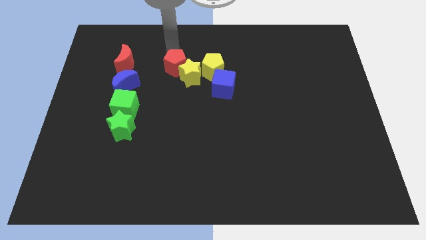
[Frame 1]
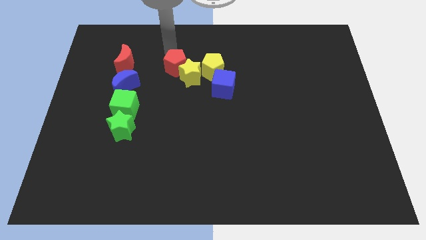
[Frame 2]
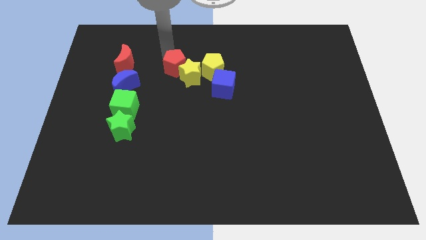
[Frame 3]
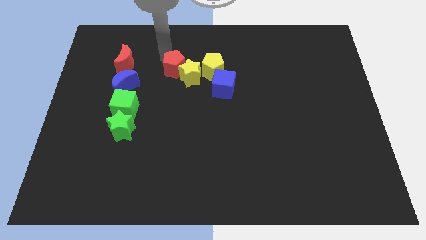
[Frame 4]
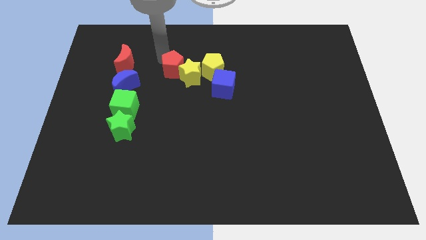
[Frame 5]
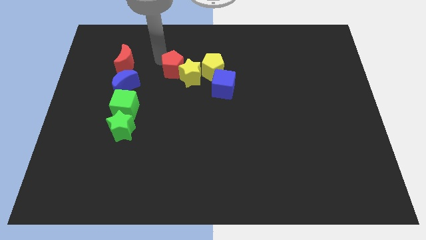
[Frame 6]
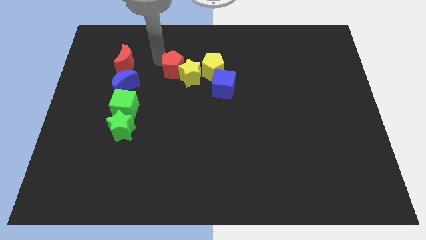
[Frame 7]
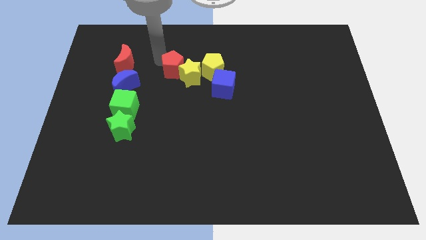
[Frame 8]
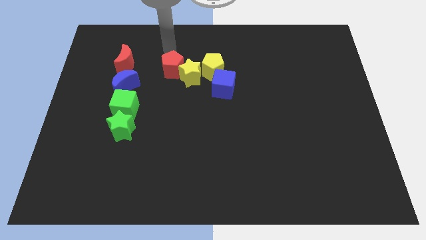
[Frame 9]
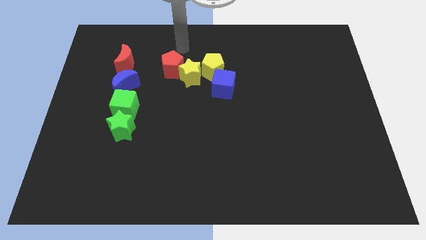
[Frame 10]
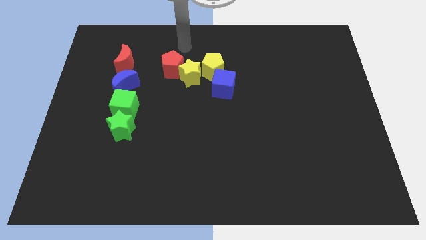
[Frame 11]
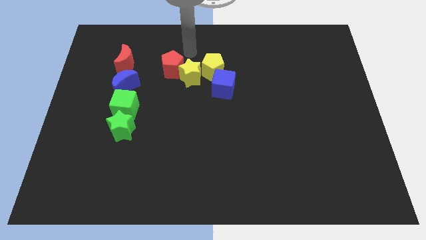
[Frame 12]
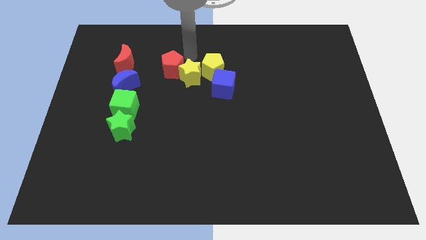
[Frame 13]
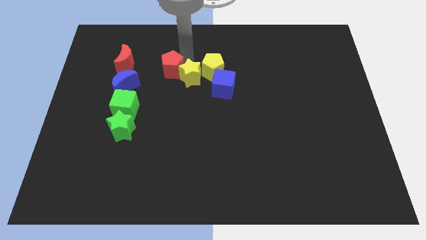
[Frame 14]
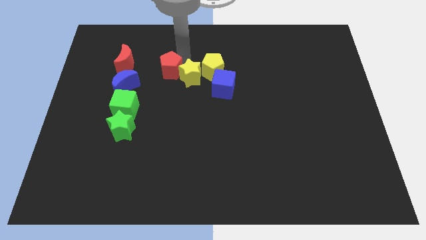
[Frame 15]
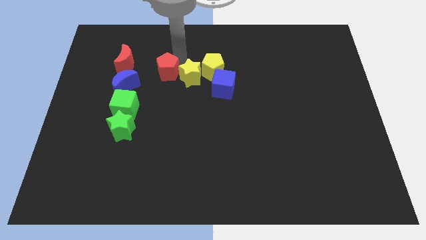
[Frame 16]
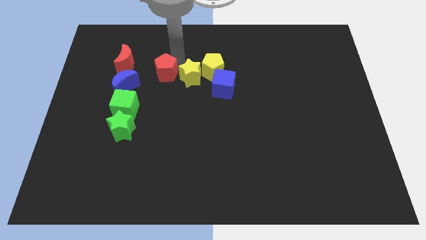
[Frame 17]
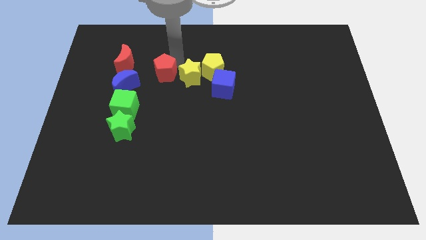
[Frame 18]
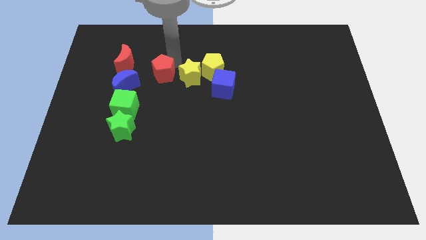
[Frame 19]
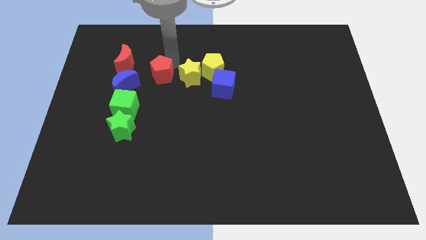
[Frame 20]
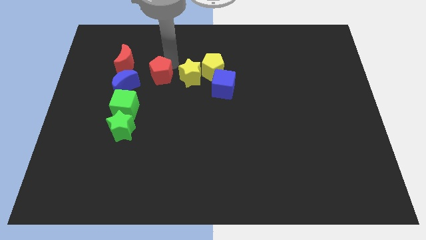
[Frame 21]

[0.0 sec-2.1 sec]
separate red pentagon from yellow star

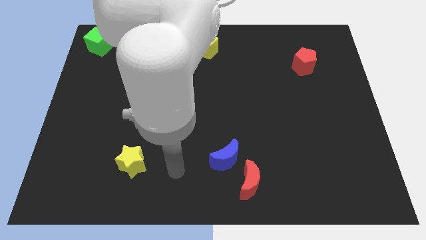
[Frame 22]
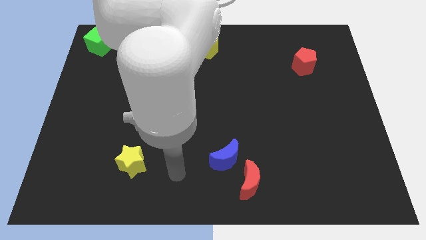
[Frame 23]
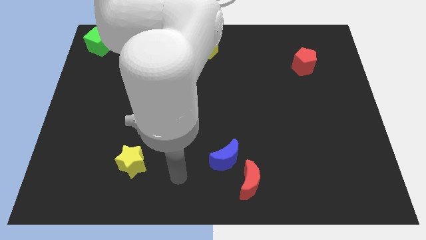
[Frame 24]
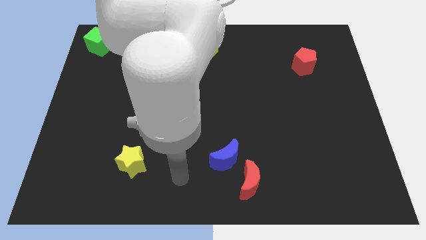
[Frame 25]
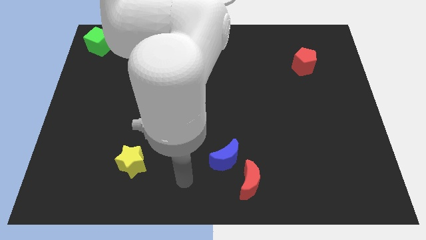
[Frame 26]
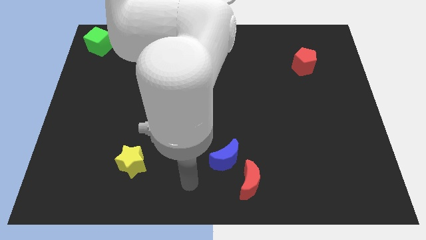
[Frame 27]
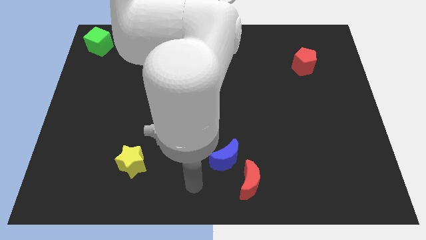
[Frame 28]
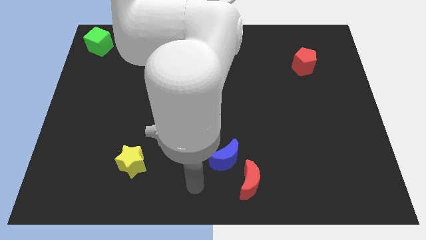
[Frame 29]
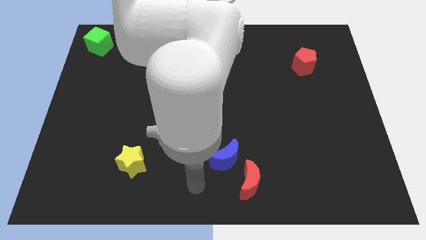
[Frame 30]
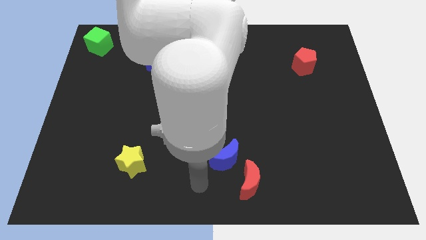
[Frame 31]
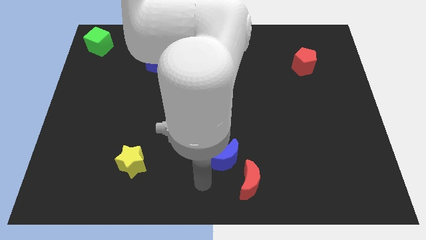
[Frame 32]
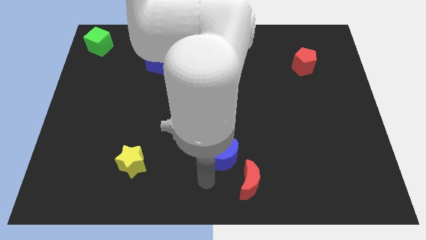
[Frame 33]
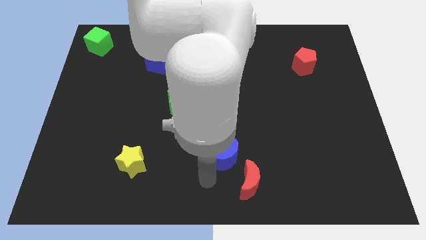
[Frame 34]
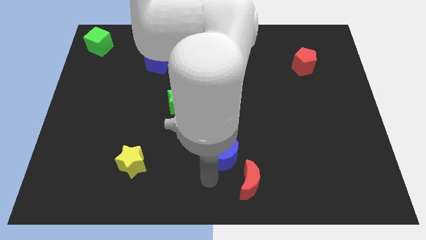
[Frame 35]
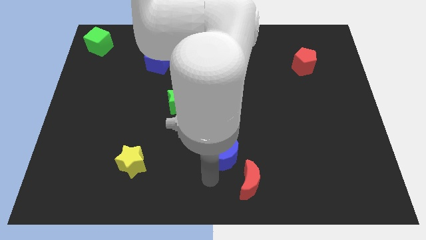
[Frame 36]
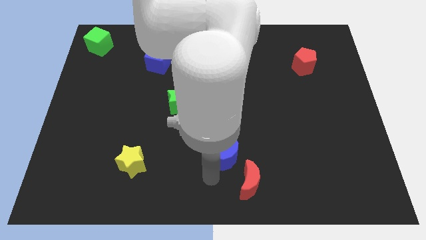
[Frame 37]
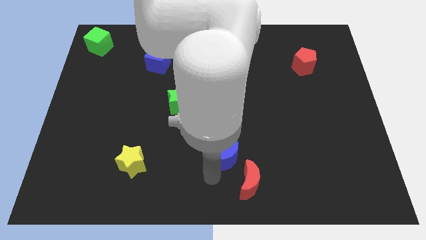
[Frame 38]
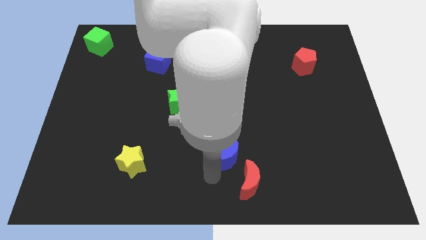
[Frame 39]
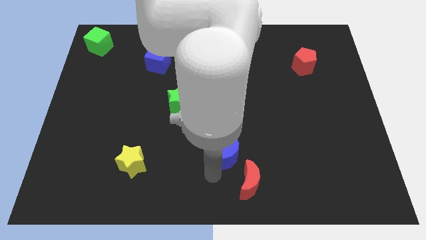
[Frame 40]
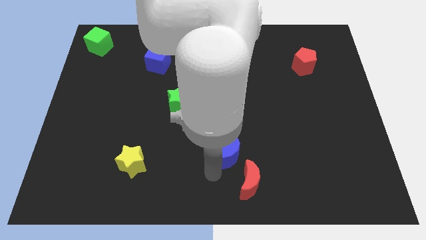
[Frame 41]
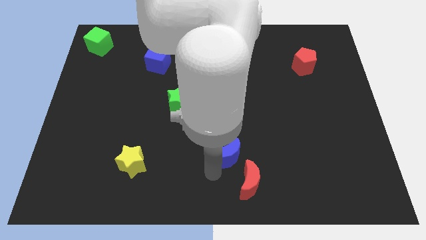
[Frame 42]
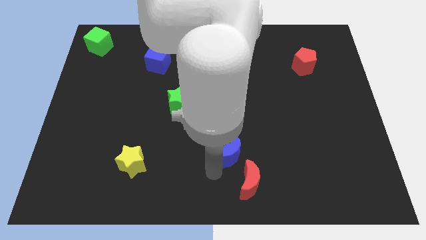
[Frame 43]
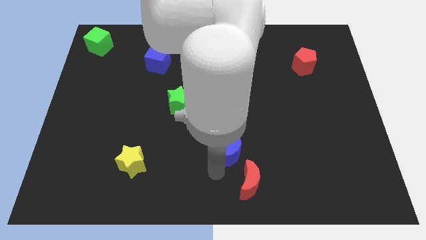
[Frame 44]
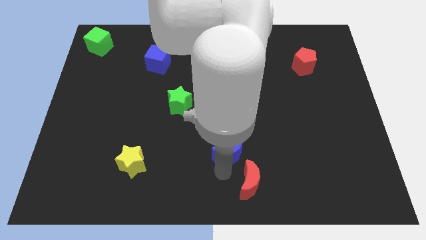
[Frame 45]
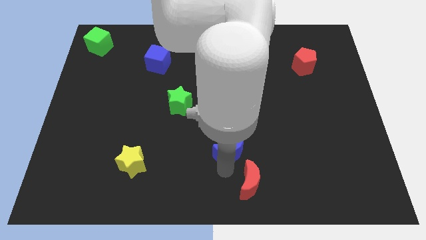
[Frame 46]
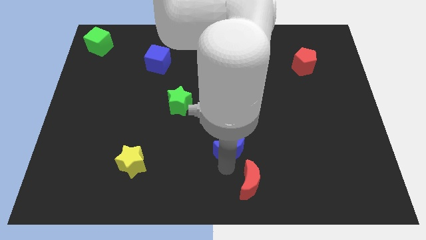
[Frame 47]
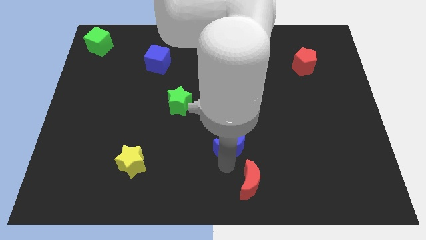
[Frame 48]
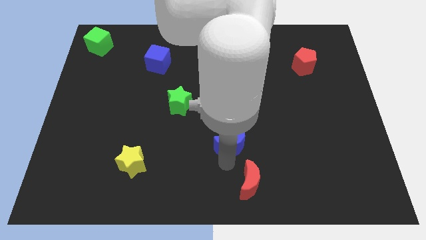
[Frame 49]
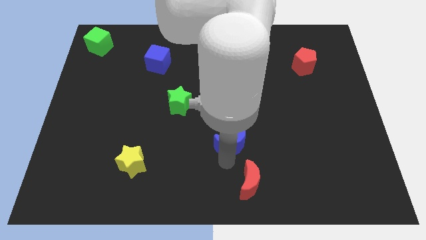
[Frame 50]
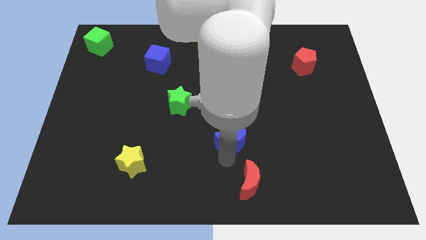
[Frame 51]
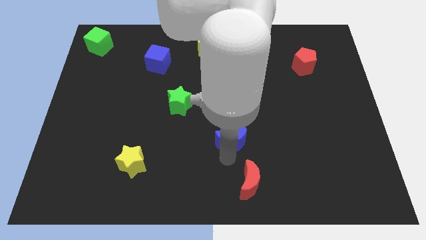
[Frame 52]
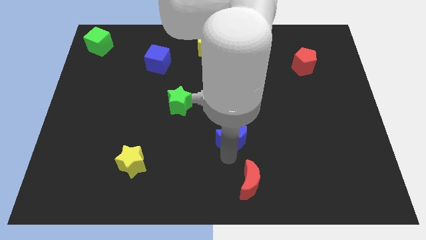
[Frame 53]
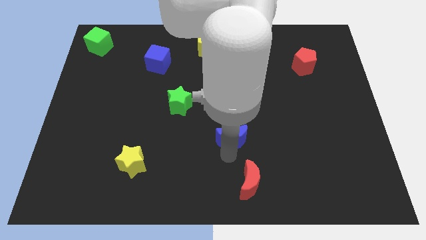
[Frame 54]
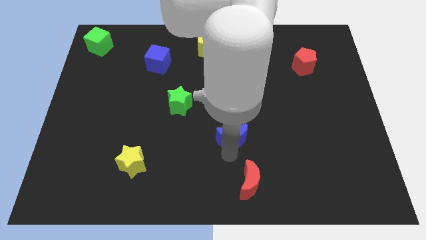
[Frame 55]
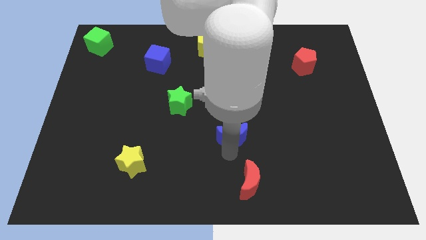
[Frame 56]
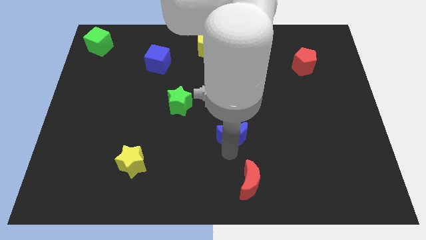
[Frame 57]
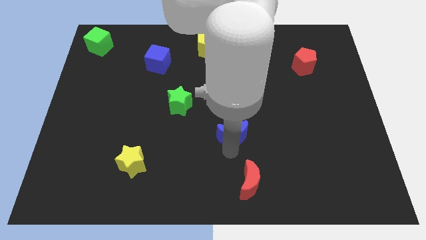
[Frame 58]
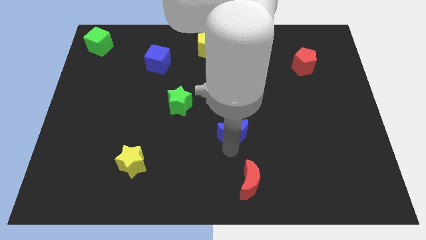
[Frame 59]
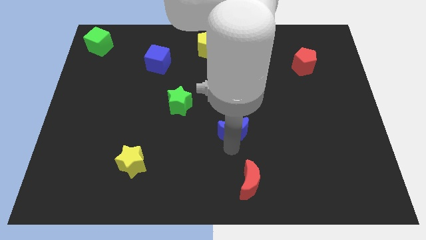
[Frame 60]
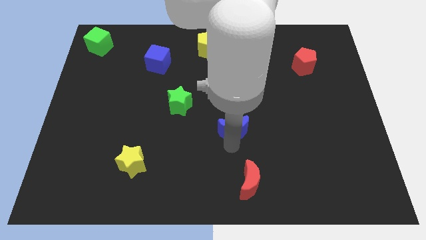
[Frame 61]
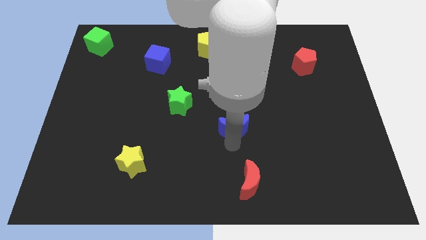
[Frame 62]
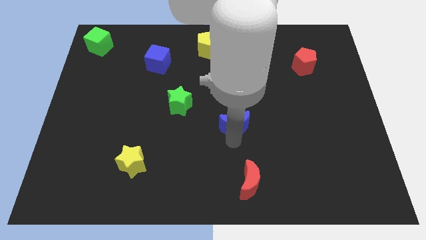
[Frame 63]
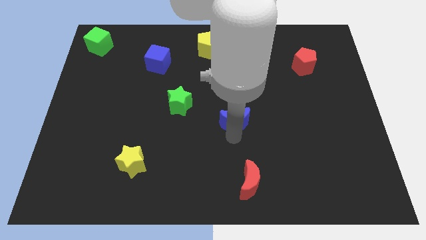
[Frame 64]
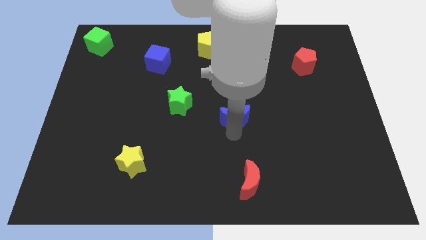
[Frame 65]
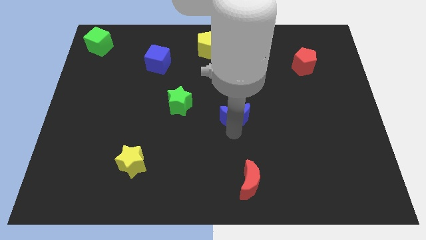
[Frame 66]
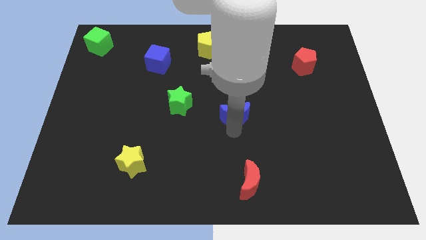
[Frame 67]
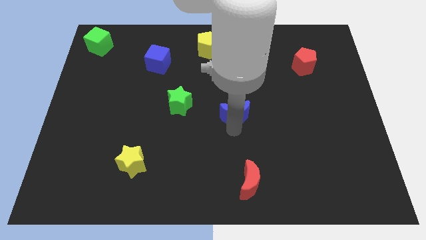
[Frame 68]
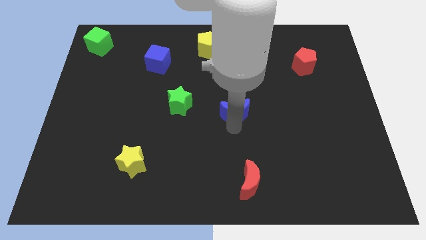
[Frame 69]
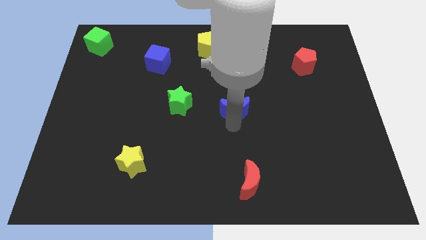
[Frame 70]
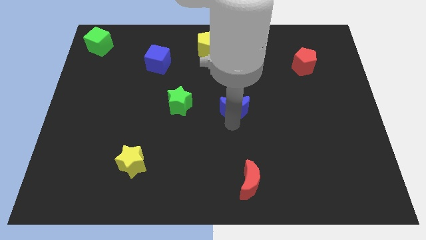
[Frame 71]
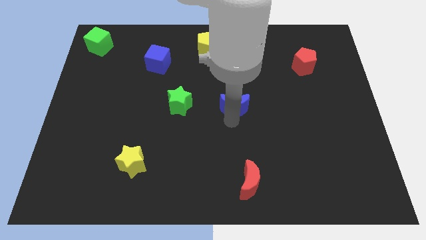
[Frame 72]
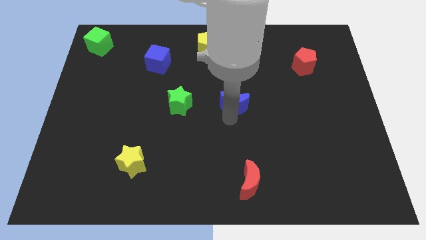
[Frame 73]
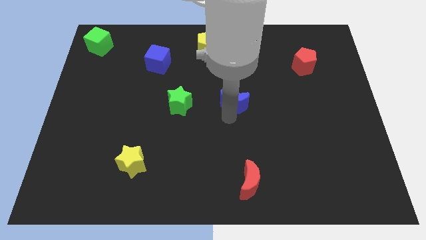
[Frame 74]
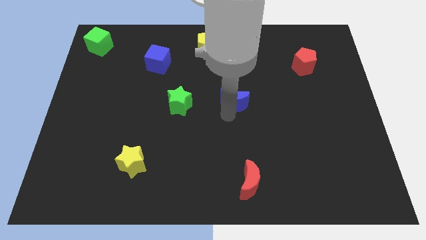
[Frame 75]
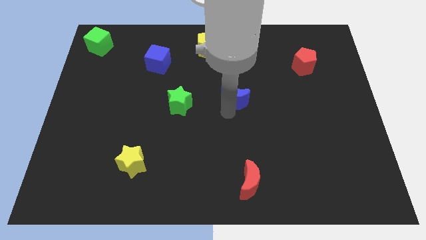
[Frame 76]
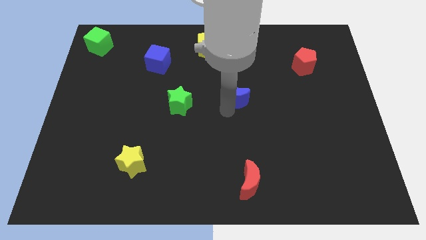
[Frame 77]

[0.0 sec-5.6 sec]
separate the blue moon from the red moon

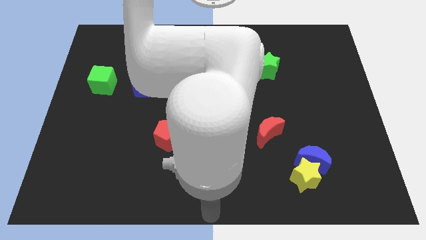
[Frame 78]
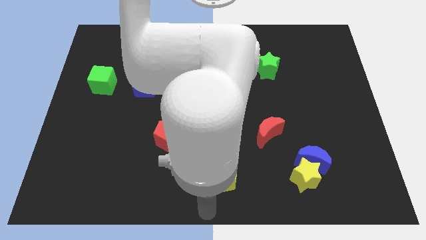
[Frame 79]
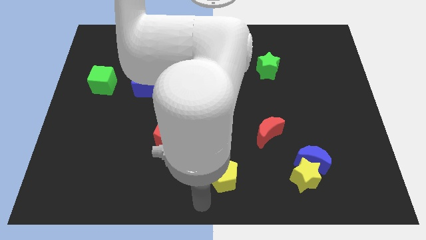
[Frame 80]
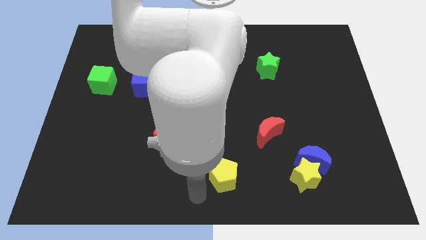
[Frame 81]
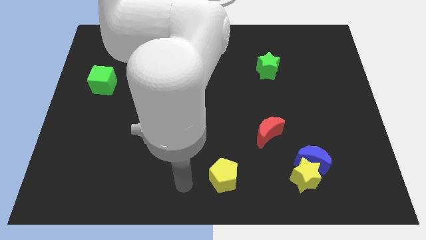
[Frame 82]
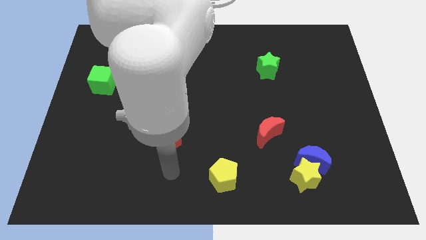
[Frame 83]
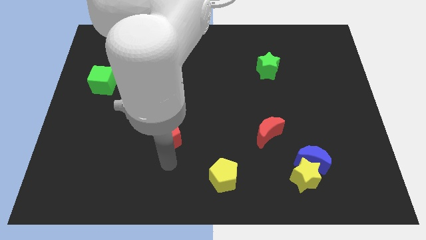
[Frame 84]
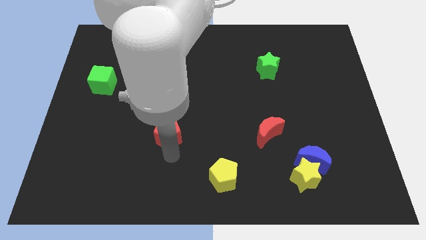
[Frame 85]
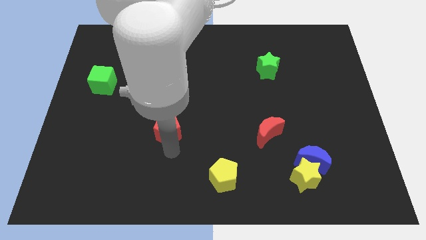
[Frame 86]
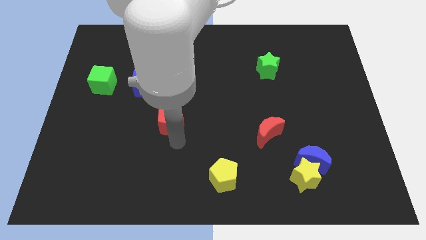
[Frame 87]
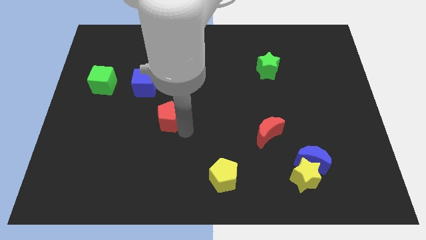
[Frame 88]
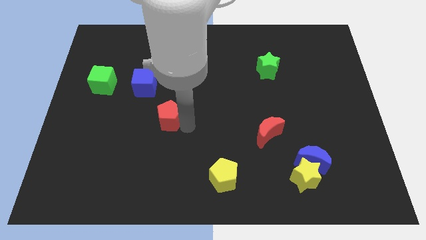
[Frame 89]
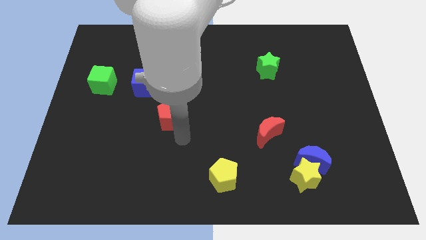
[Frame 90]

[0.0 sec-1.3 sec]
move the red pentagon upwards
